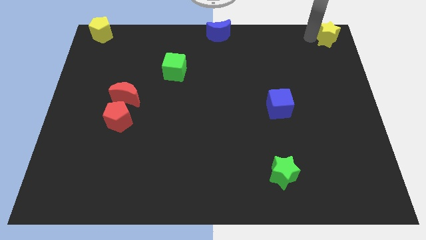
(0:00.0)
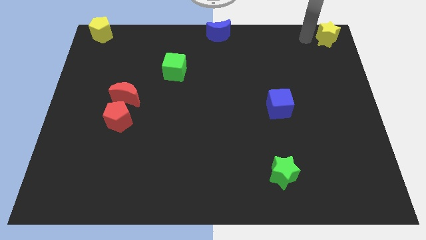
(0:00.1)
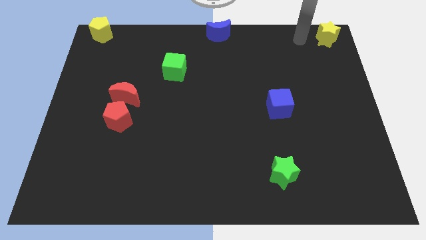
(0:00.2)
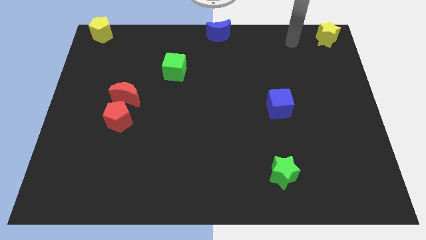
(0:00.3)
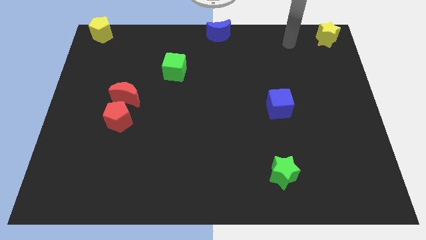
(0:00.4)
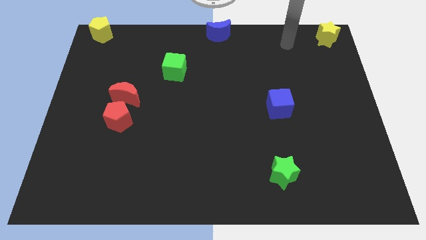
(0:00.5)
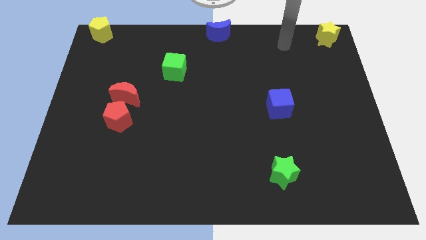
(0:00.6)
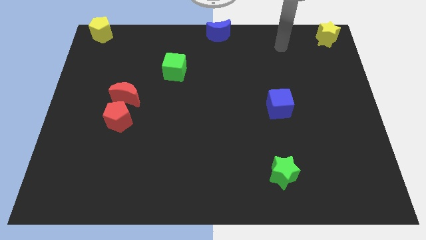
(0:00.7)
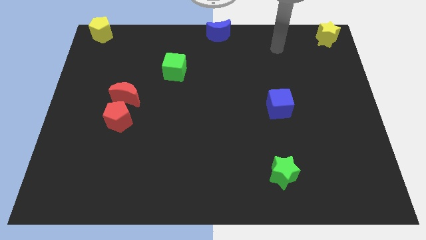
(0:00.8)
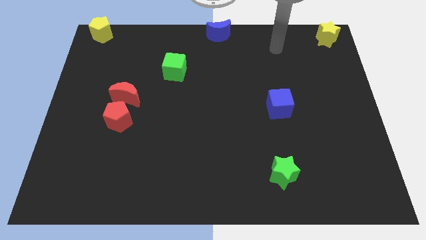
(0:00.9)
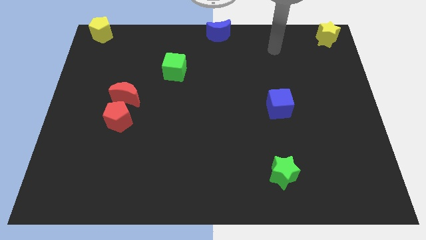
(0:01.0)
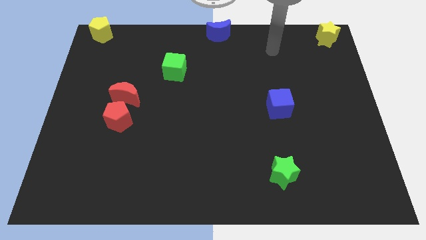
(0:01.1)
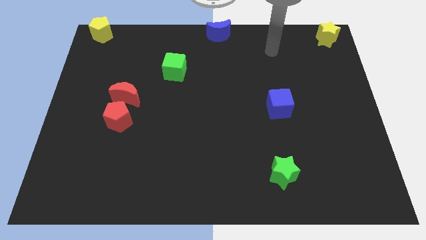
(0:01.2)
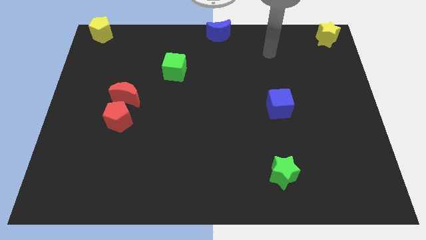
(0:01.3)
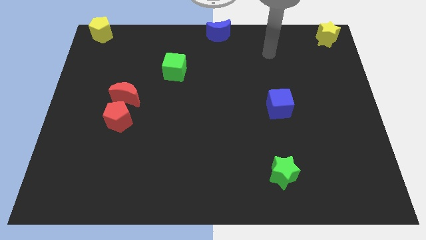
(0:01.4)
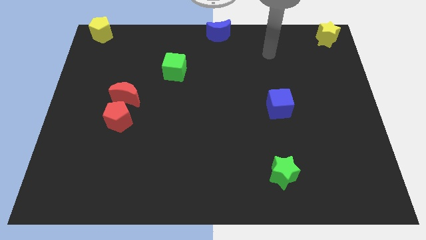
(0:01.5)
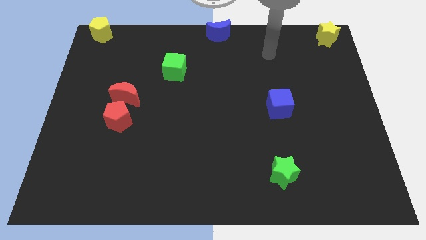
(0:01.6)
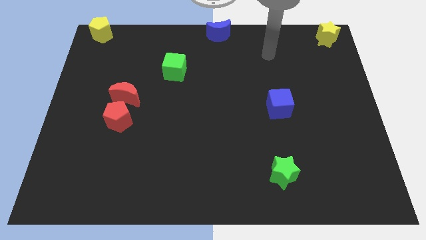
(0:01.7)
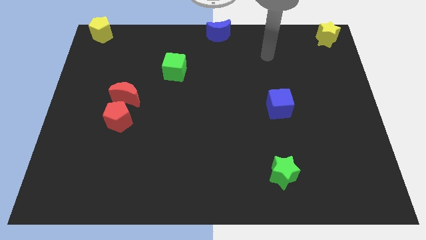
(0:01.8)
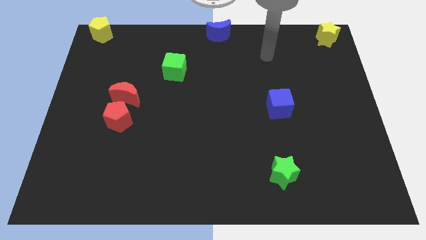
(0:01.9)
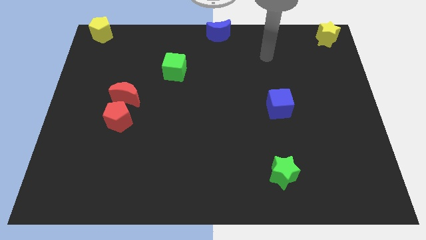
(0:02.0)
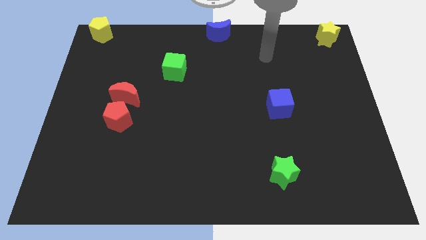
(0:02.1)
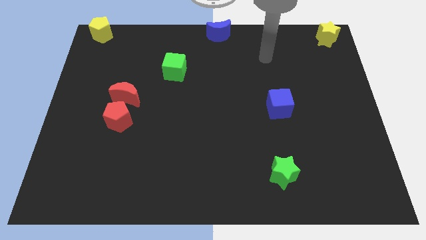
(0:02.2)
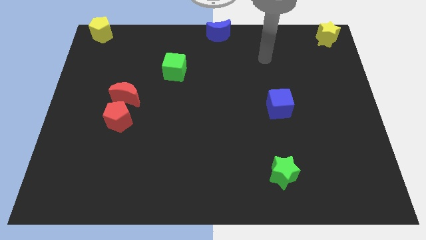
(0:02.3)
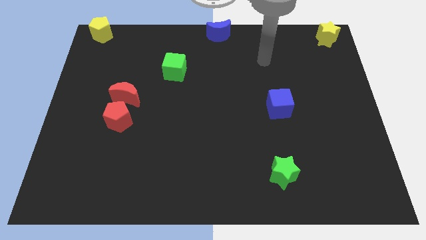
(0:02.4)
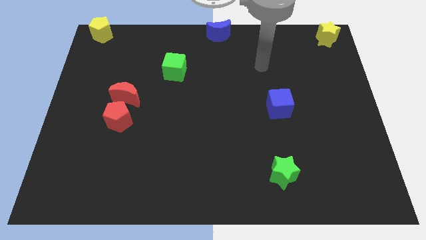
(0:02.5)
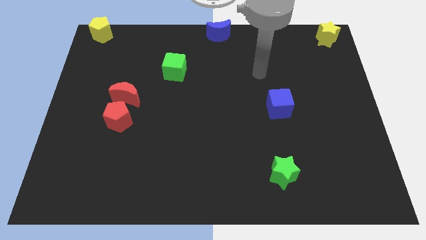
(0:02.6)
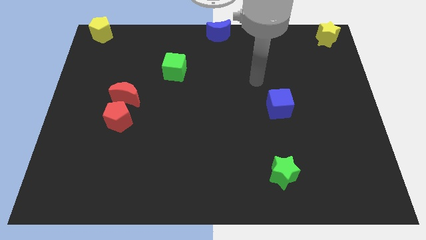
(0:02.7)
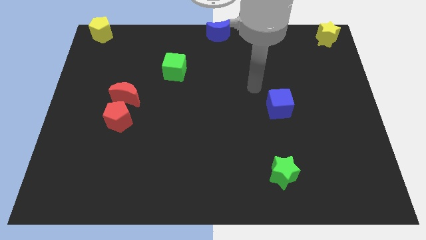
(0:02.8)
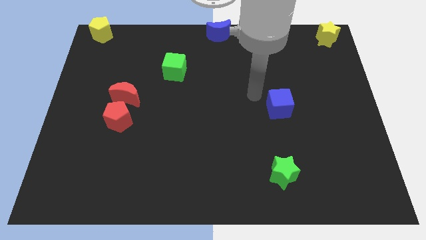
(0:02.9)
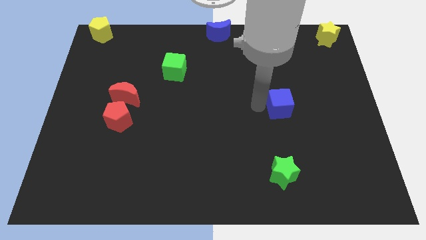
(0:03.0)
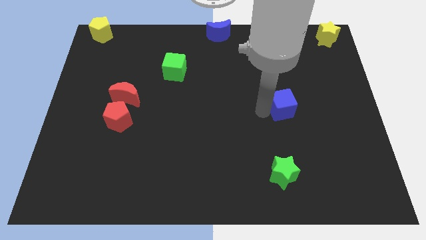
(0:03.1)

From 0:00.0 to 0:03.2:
point your arm at the left of the blue cube

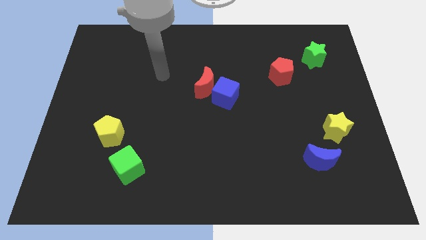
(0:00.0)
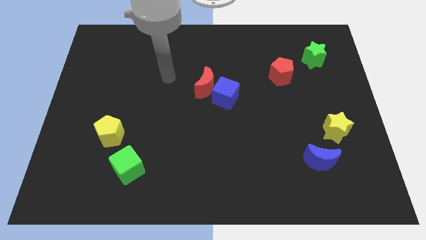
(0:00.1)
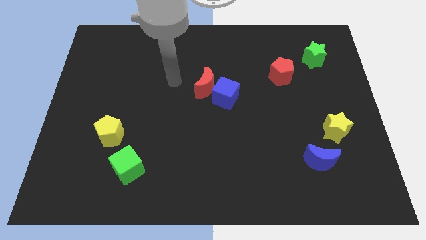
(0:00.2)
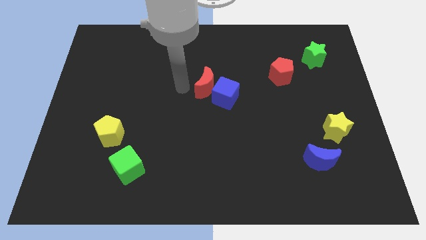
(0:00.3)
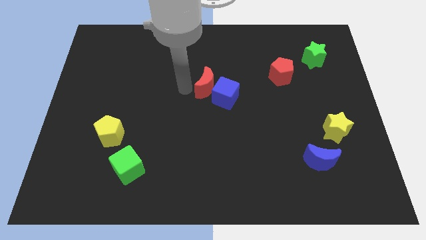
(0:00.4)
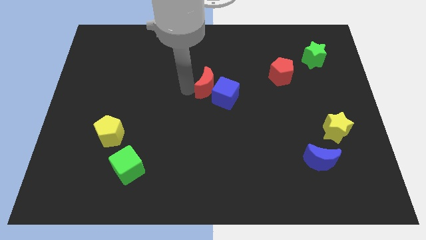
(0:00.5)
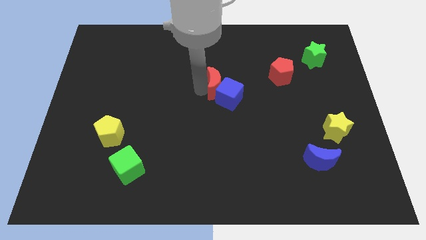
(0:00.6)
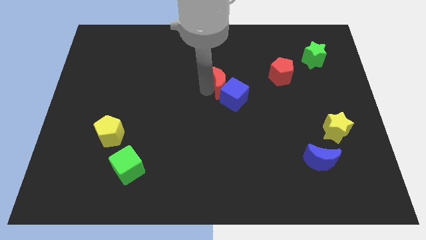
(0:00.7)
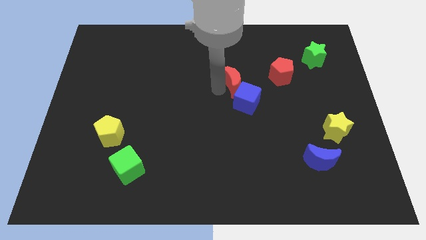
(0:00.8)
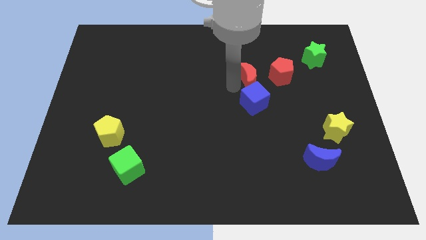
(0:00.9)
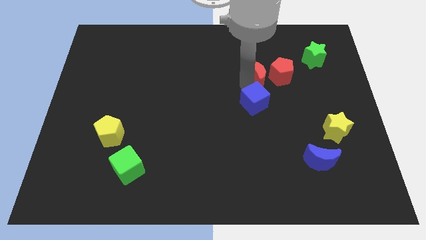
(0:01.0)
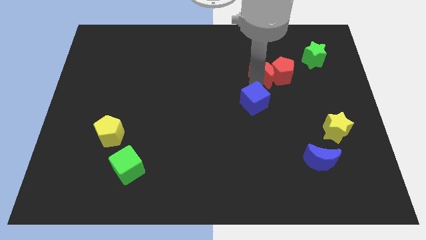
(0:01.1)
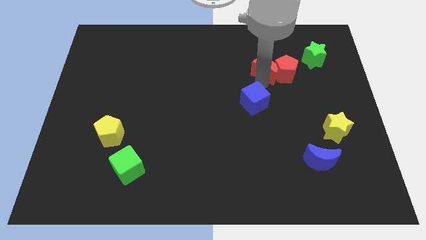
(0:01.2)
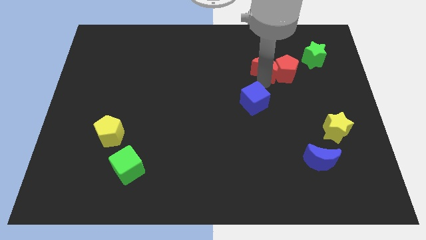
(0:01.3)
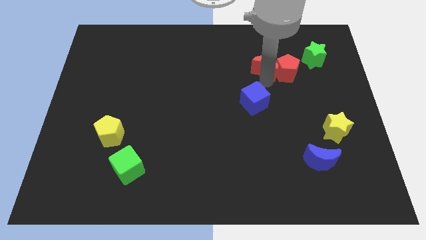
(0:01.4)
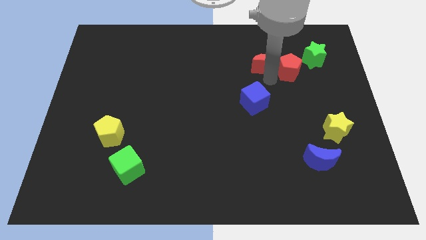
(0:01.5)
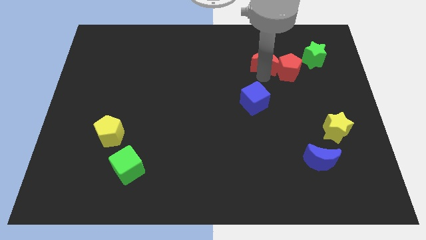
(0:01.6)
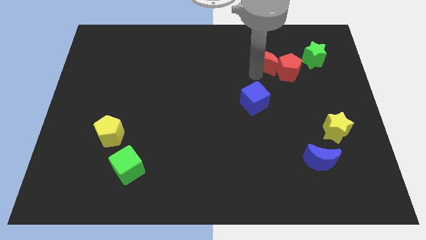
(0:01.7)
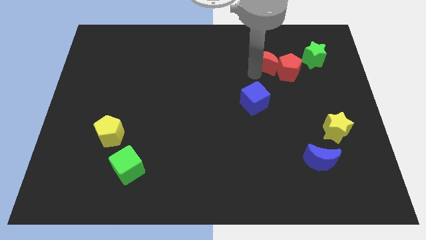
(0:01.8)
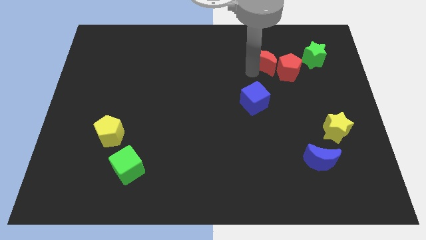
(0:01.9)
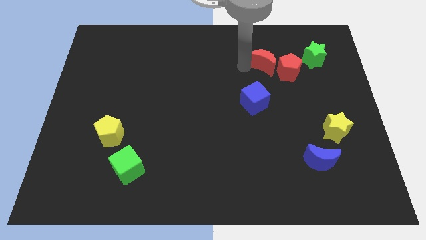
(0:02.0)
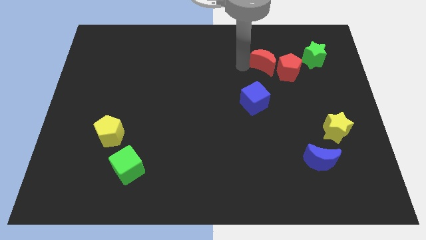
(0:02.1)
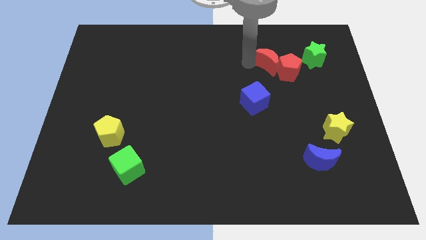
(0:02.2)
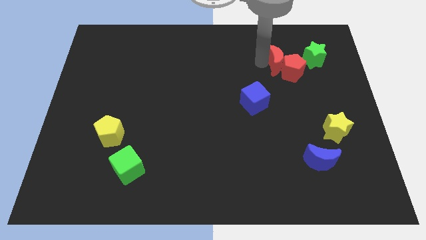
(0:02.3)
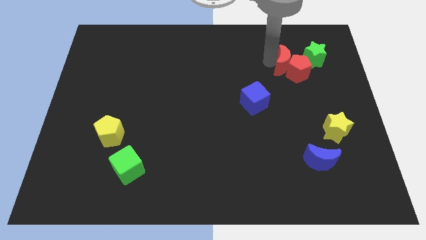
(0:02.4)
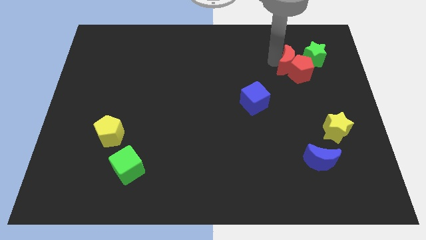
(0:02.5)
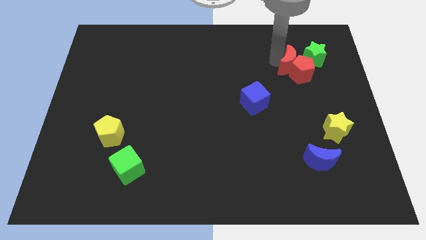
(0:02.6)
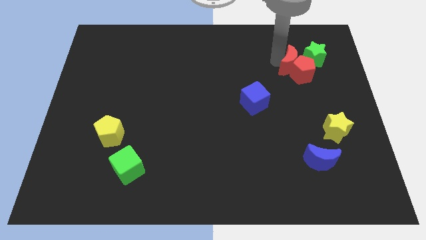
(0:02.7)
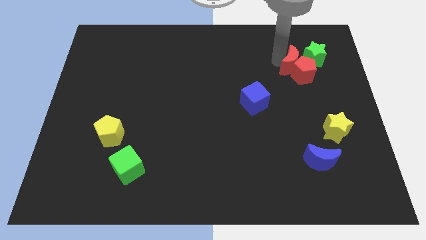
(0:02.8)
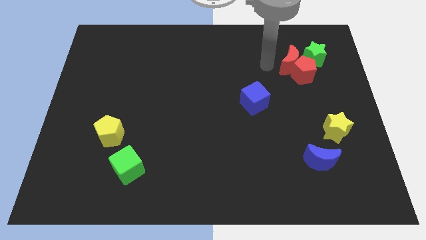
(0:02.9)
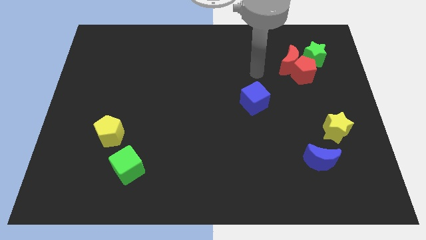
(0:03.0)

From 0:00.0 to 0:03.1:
move the red crescent into the red pentagon from the left side

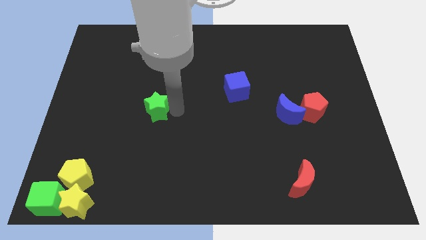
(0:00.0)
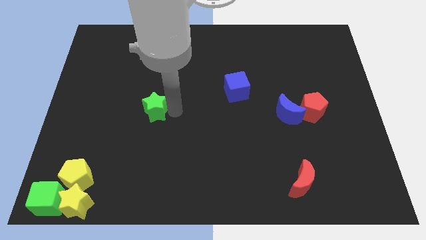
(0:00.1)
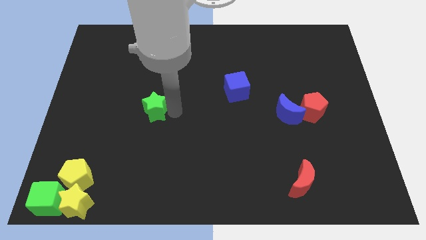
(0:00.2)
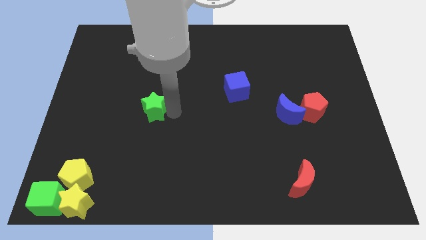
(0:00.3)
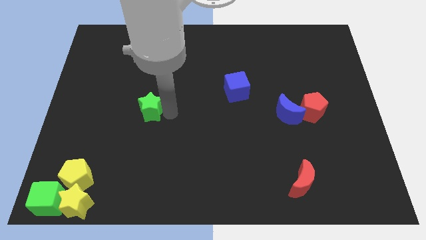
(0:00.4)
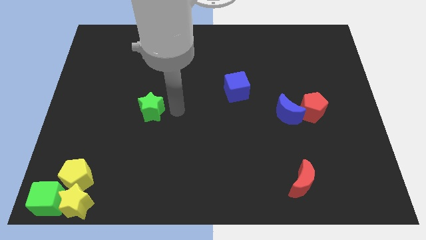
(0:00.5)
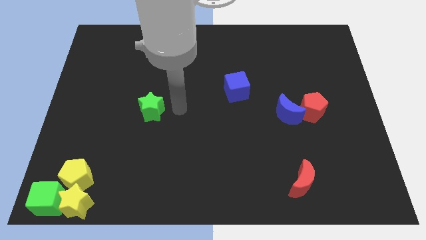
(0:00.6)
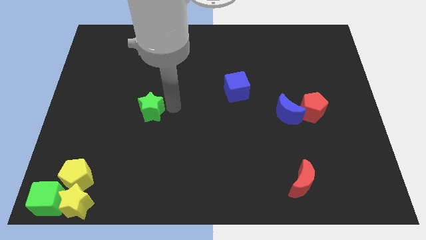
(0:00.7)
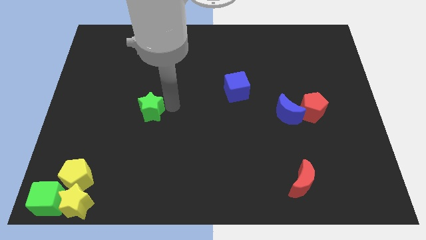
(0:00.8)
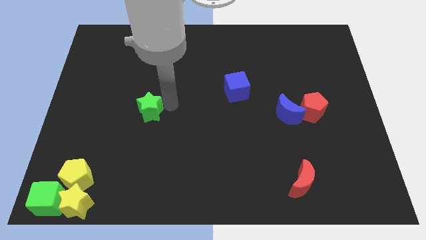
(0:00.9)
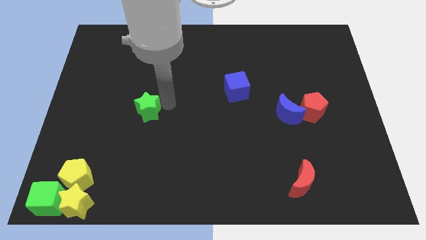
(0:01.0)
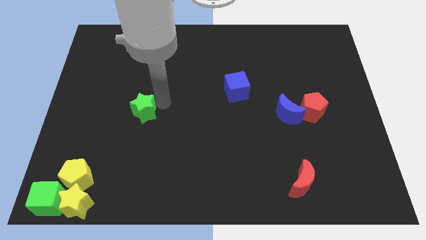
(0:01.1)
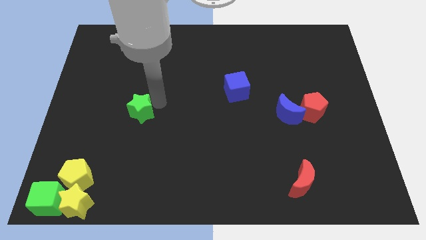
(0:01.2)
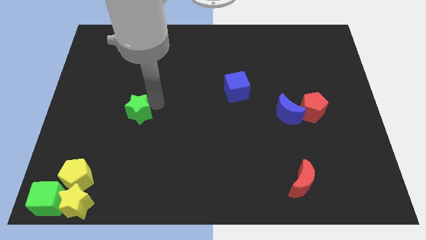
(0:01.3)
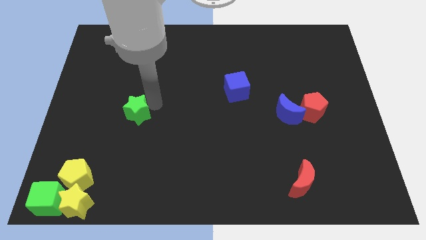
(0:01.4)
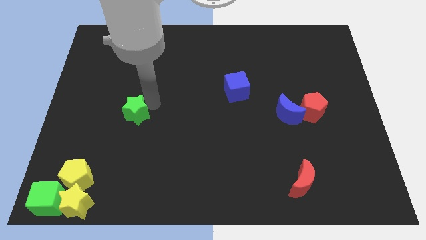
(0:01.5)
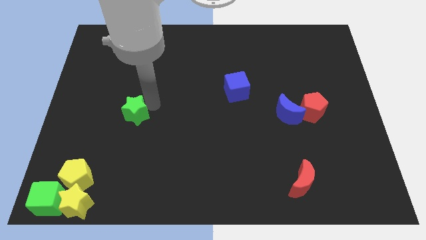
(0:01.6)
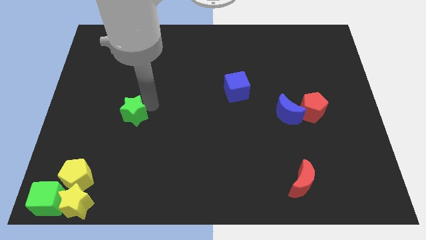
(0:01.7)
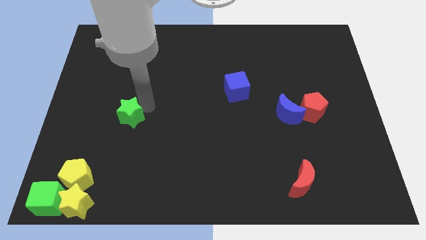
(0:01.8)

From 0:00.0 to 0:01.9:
move the green star to the left of the board

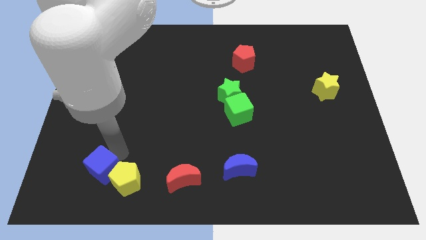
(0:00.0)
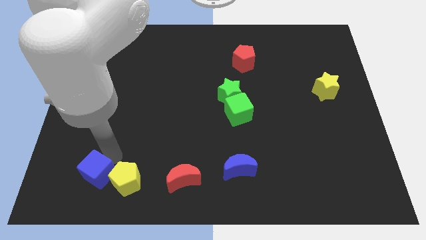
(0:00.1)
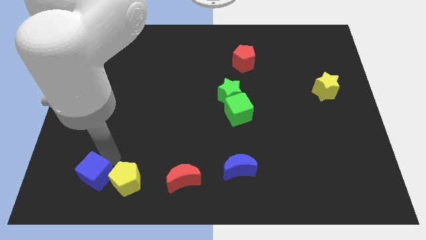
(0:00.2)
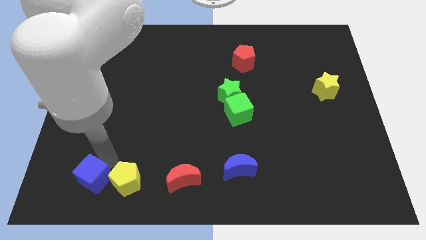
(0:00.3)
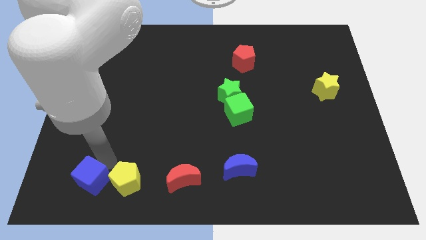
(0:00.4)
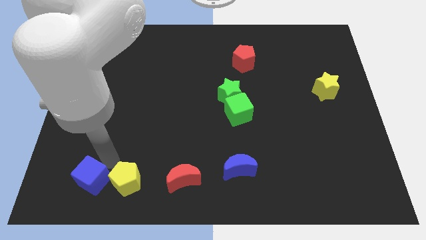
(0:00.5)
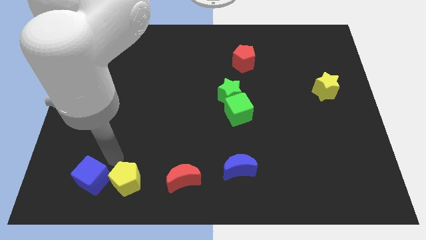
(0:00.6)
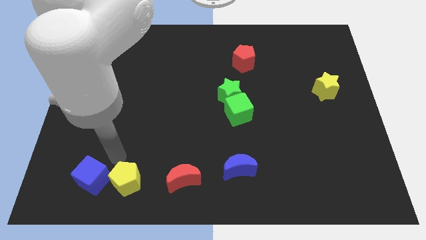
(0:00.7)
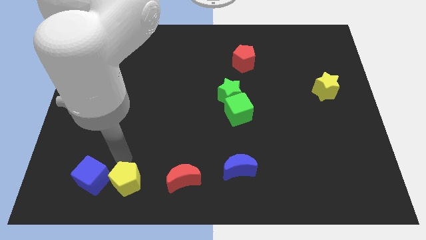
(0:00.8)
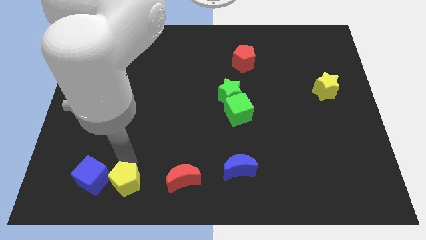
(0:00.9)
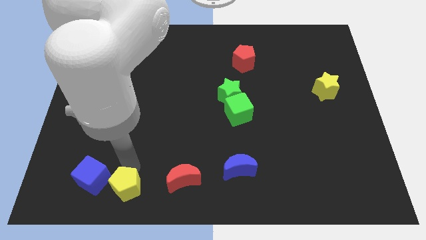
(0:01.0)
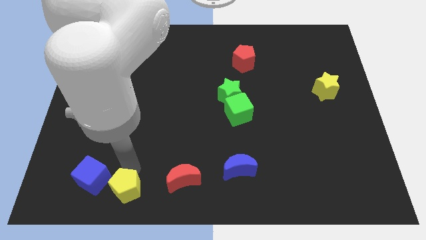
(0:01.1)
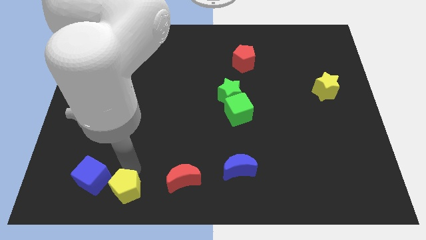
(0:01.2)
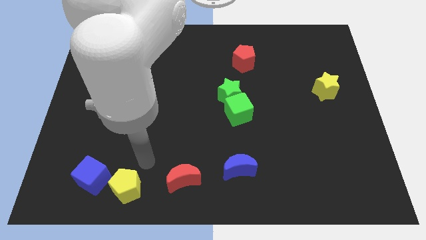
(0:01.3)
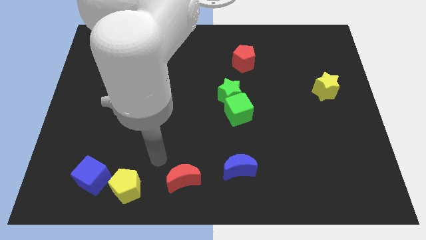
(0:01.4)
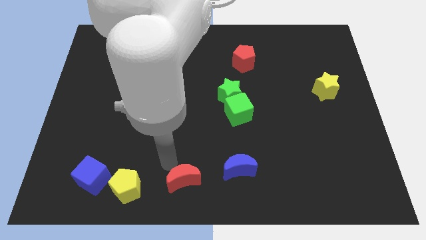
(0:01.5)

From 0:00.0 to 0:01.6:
separate blue cube and the yellow pentagon
